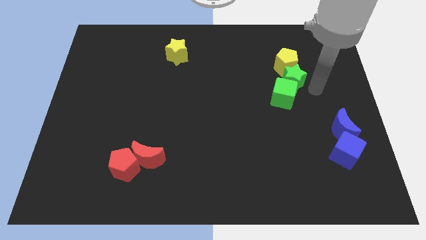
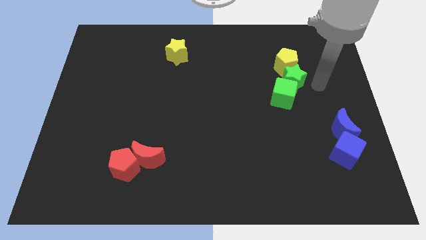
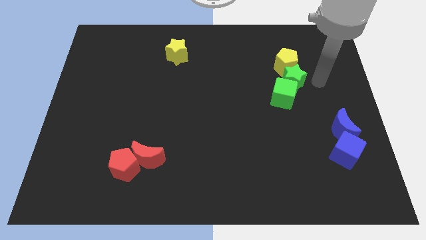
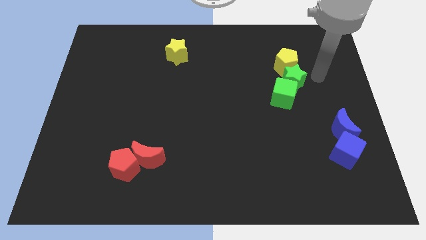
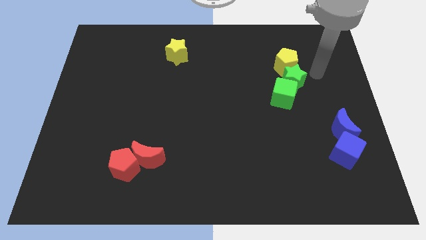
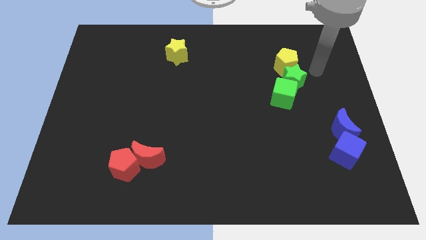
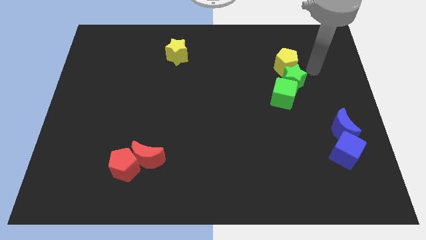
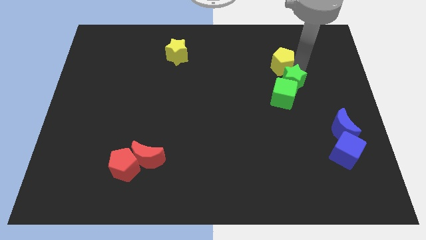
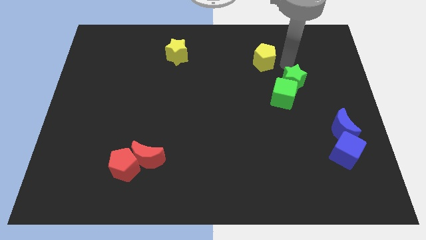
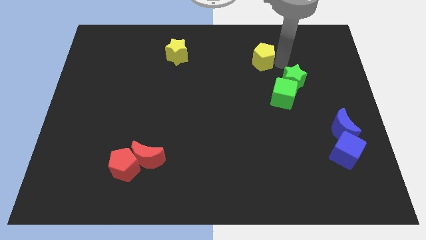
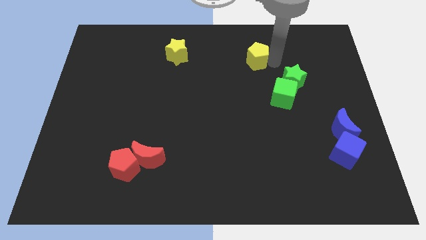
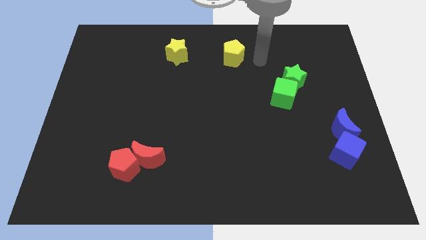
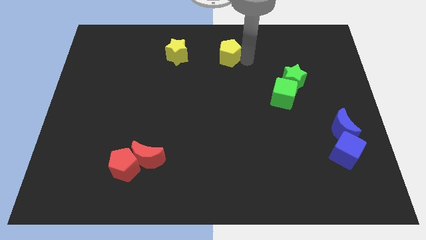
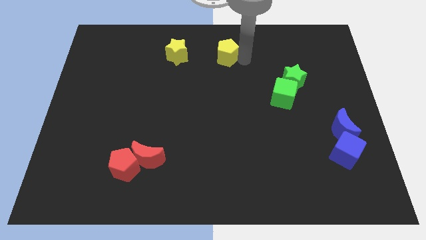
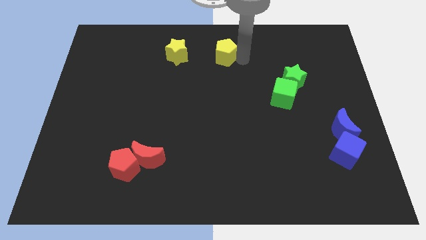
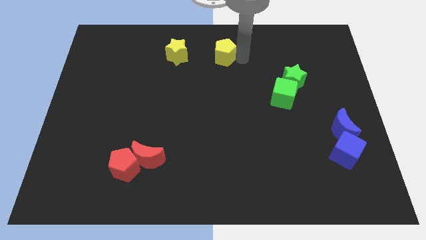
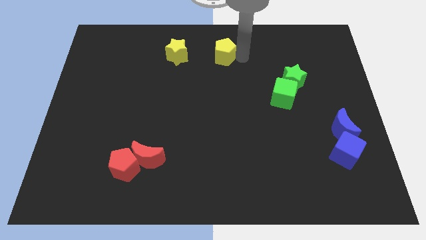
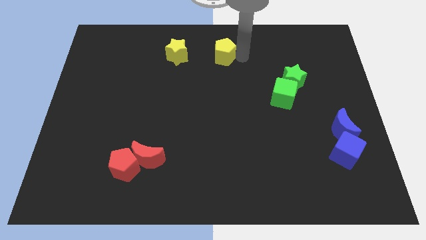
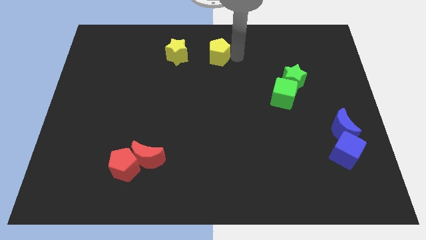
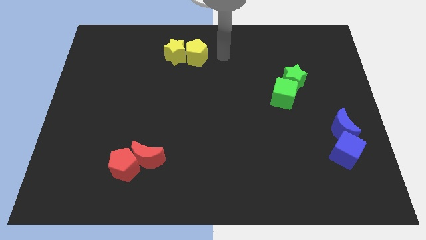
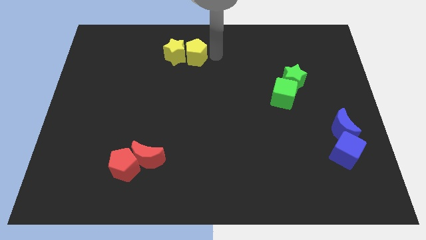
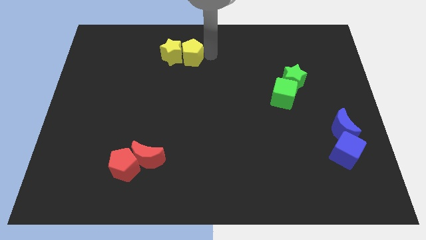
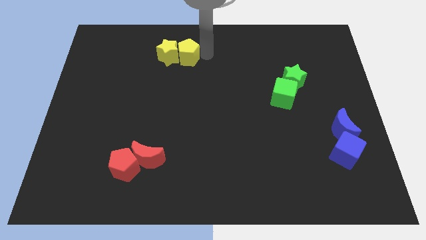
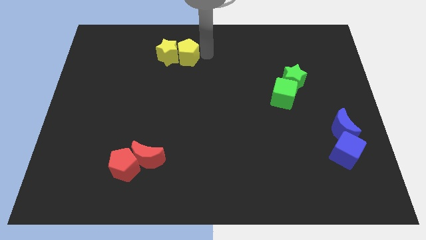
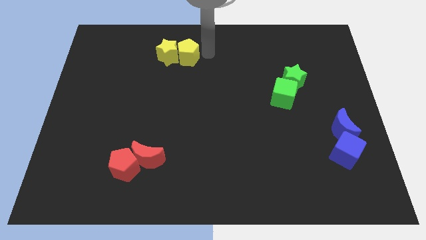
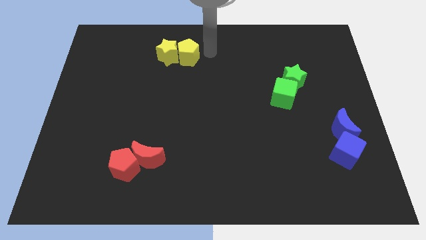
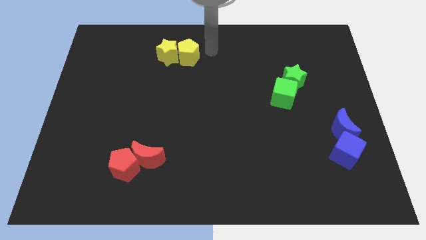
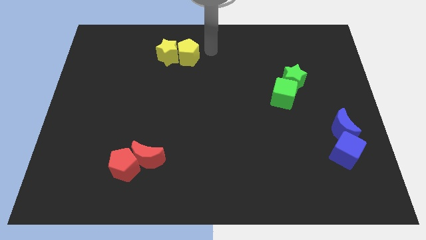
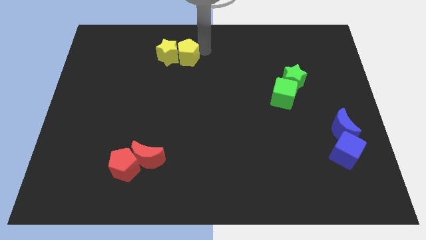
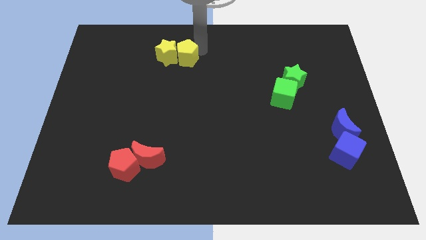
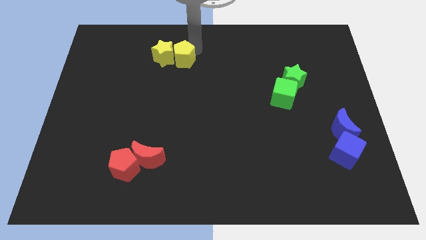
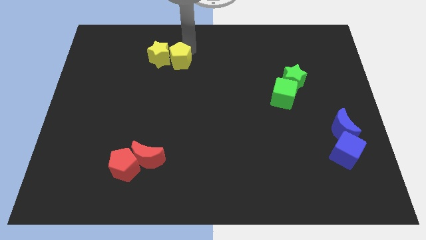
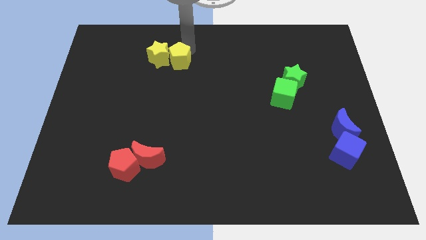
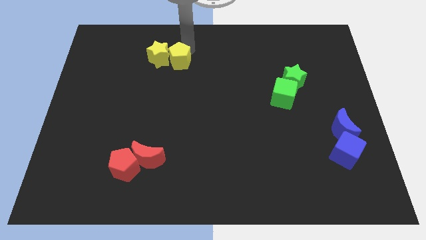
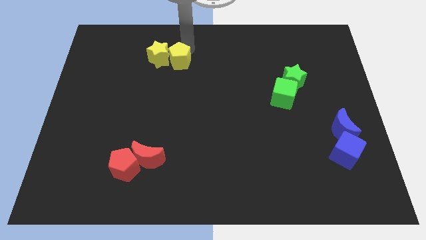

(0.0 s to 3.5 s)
push the yellow pentagon into the yellow star

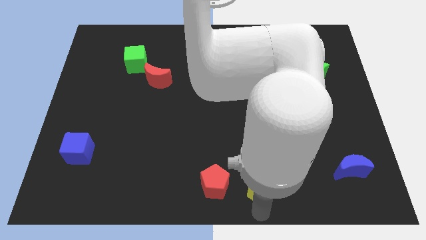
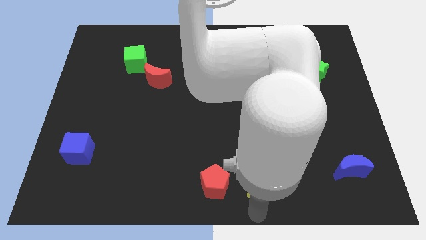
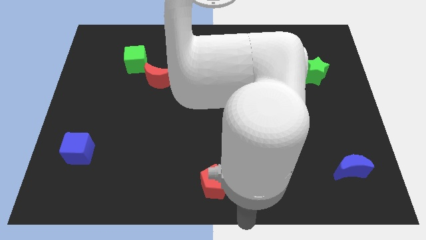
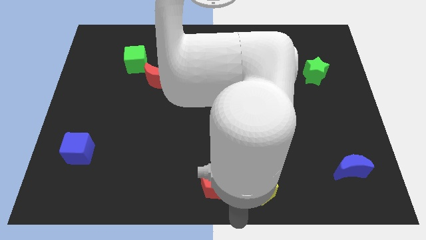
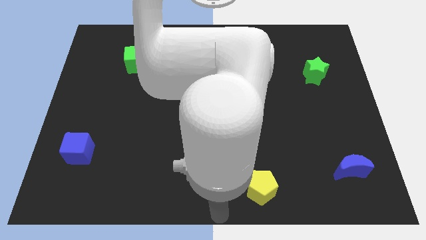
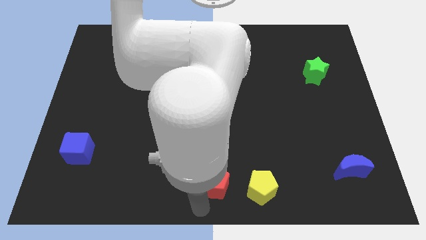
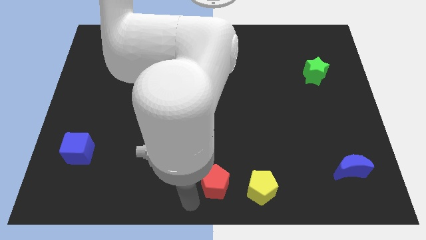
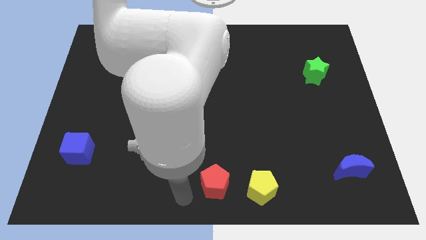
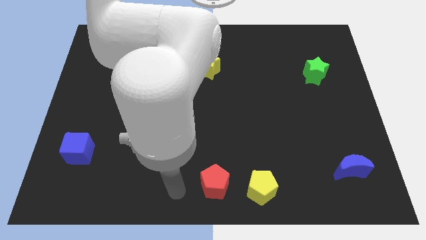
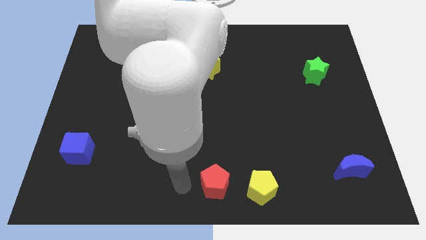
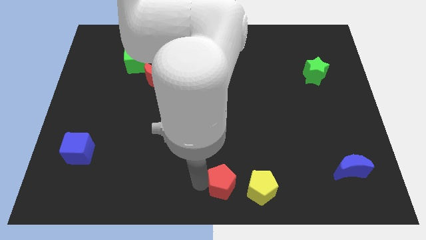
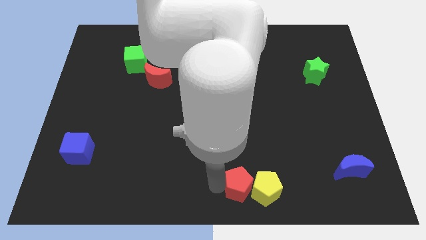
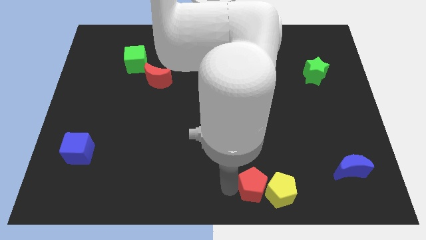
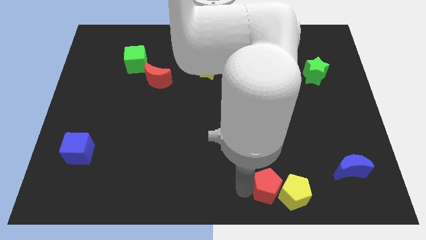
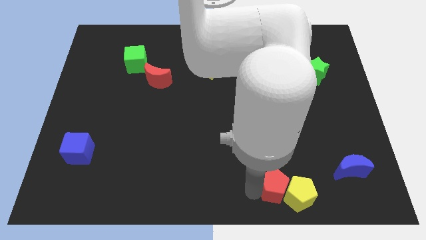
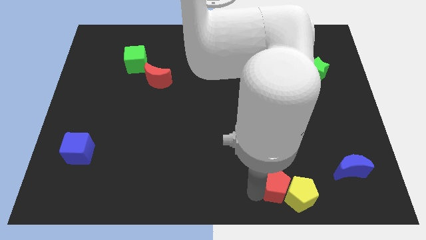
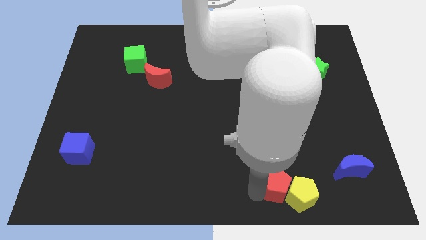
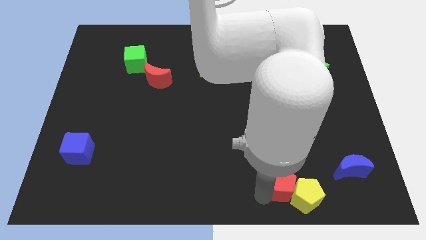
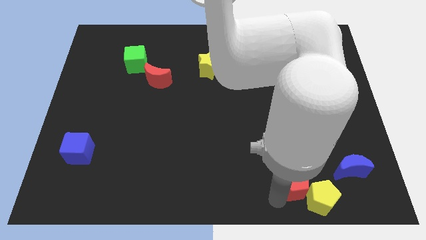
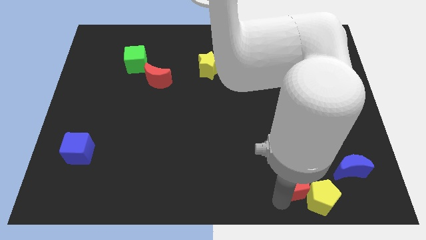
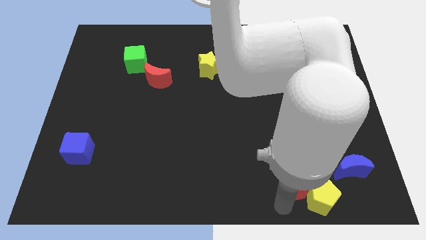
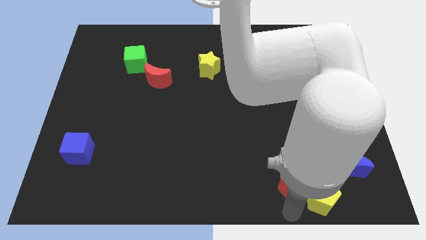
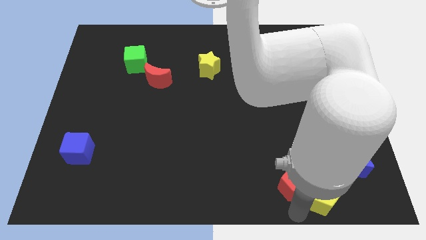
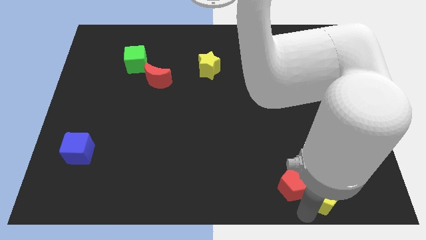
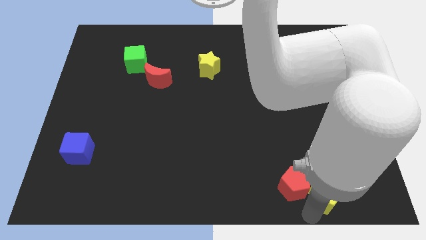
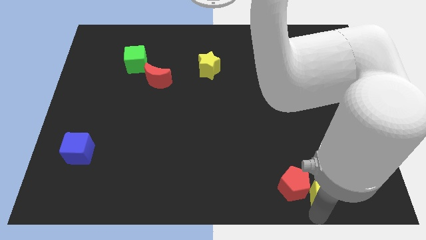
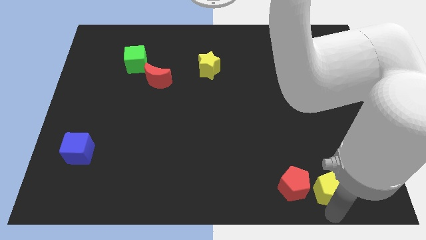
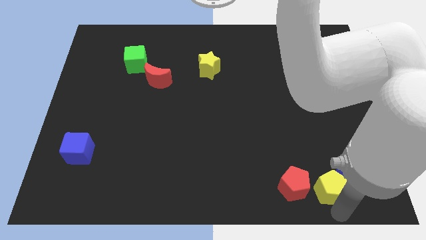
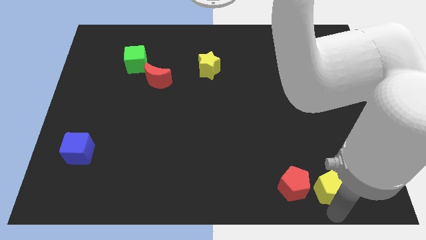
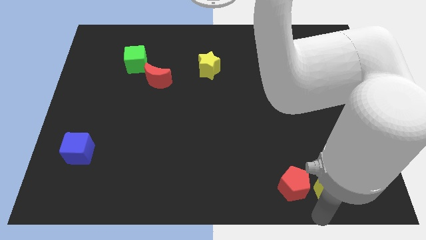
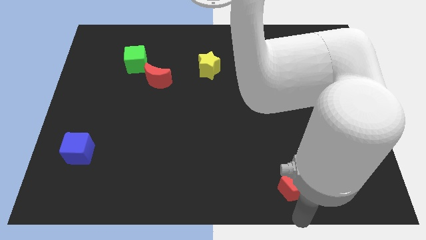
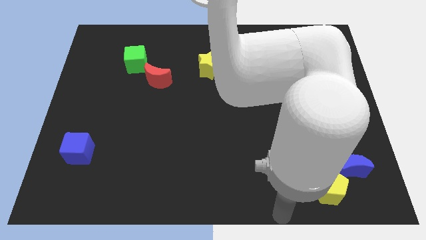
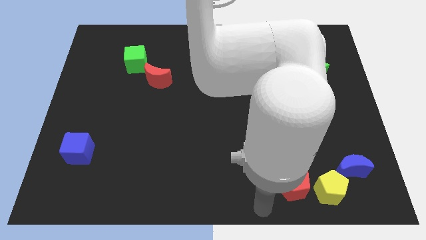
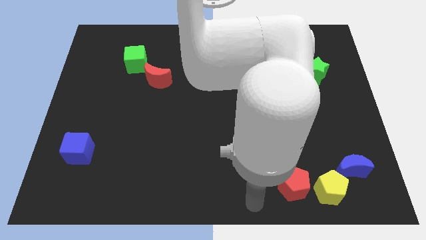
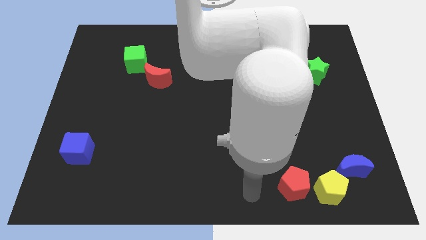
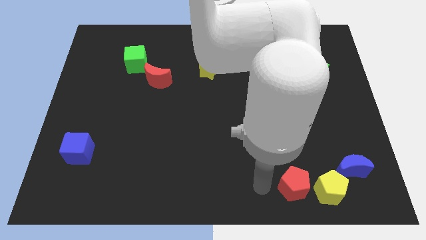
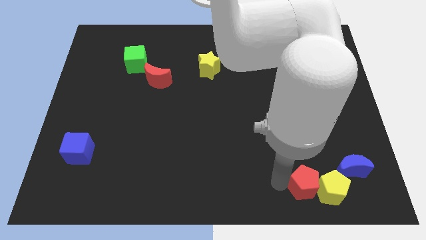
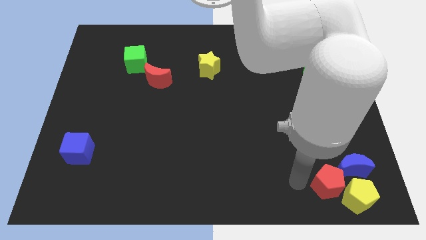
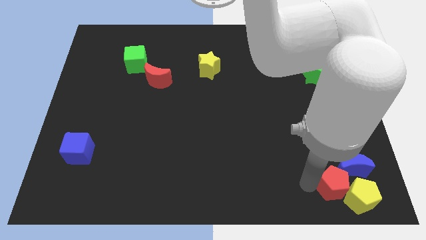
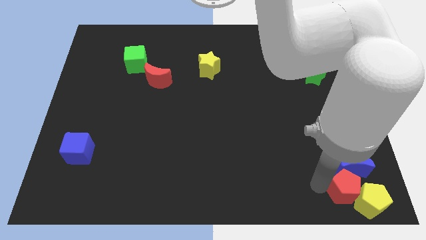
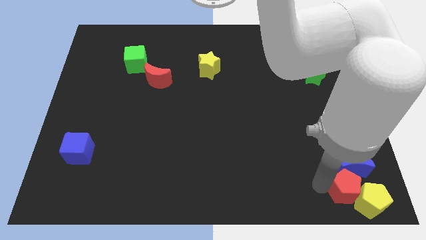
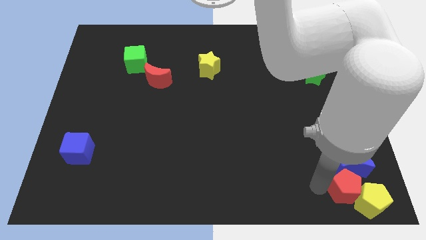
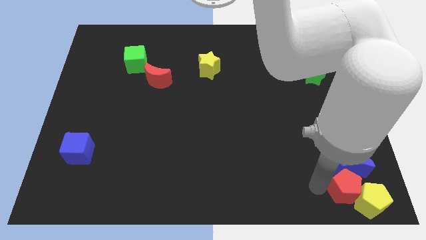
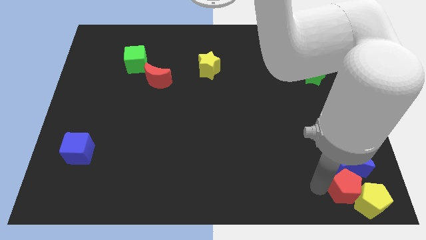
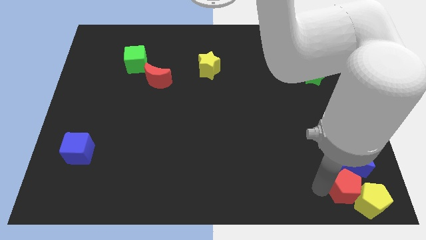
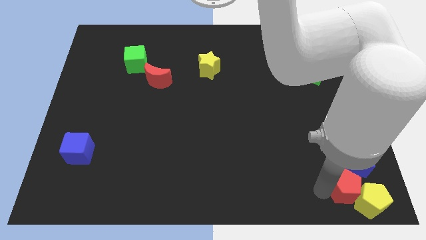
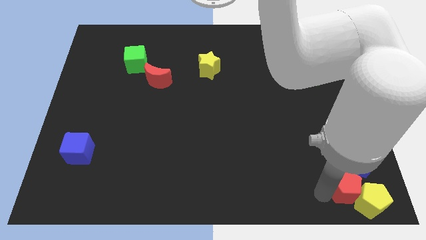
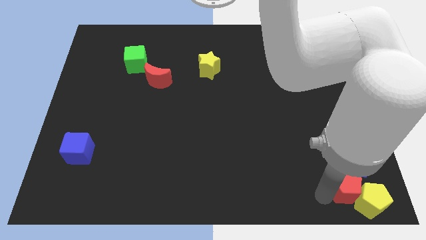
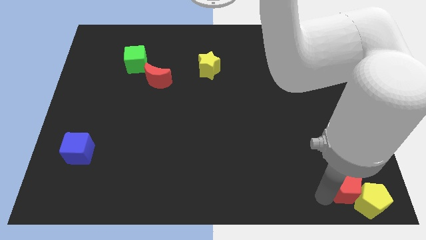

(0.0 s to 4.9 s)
push the yellow pentagon and red pentagon to the bottom right corner

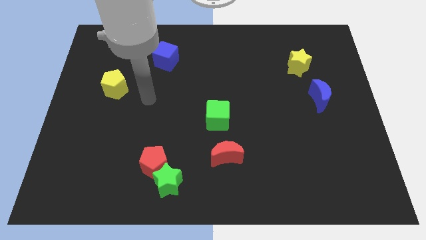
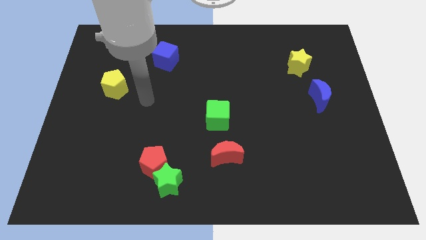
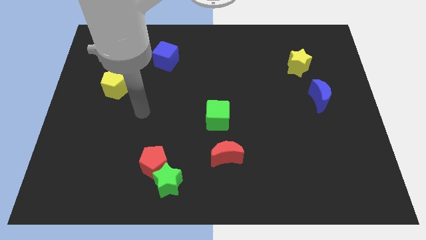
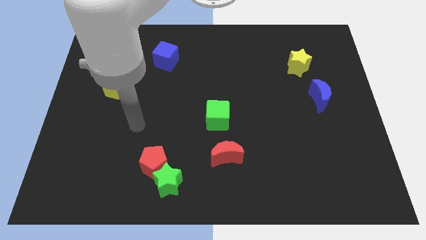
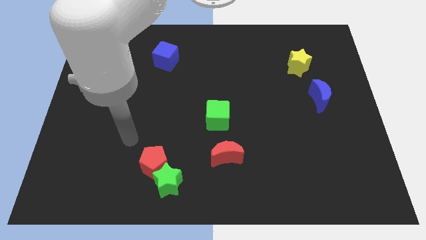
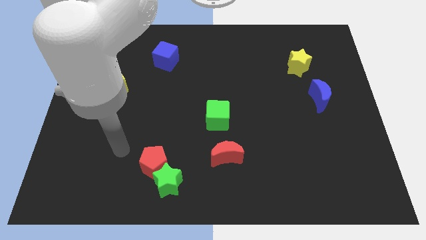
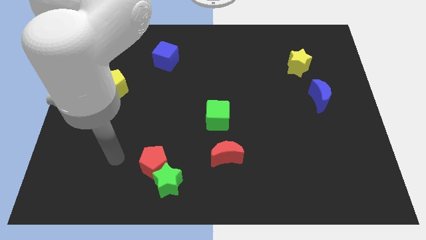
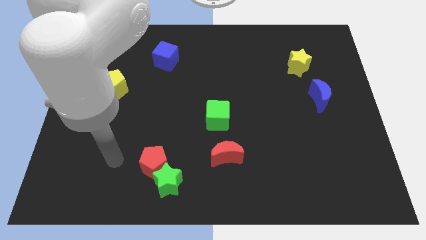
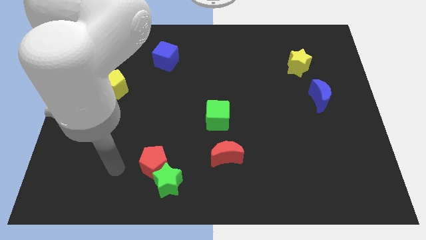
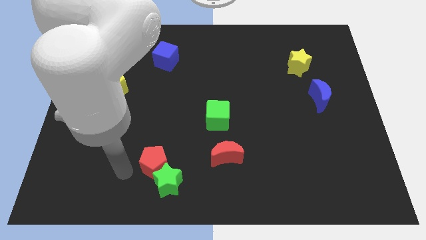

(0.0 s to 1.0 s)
move your arm to the bottom center
